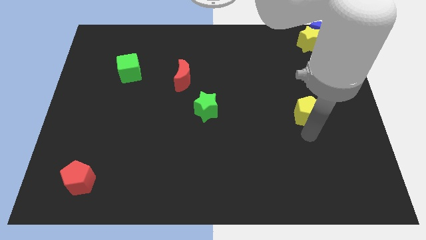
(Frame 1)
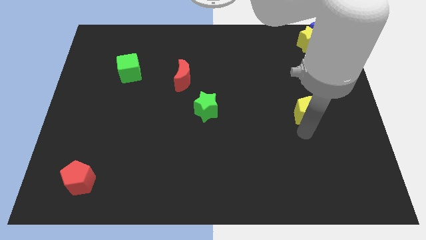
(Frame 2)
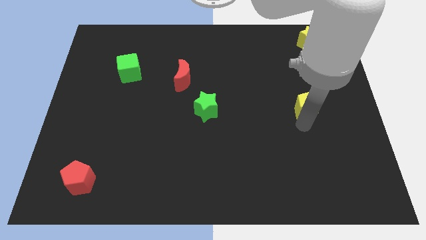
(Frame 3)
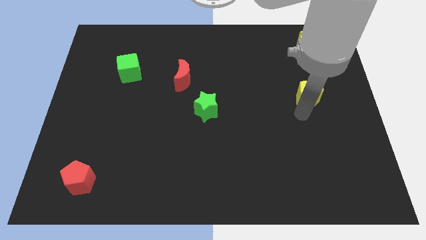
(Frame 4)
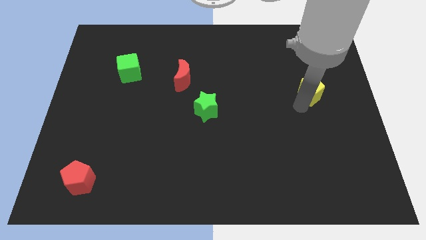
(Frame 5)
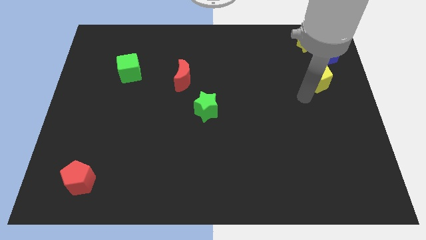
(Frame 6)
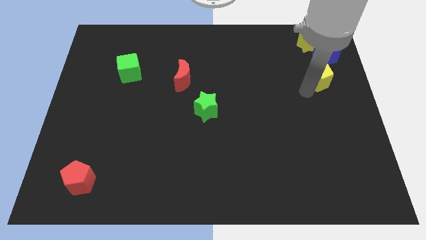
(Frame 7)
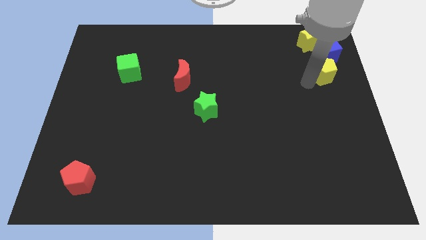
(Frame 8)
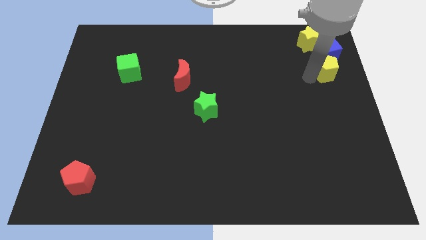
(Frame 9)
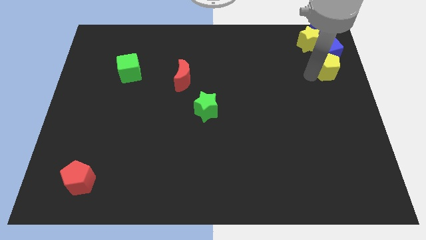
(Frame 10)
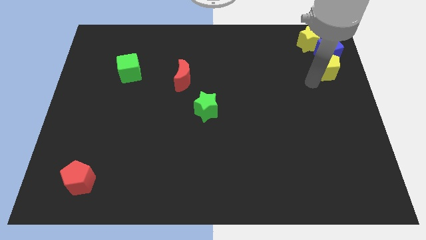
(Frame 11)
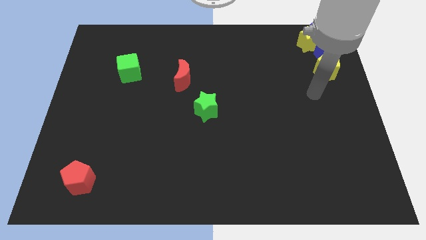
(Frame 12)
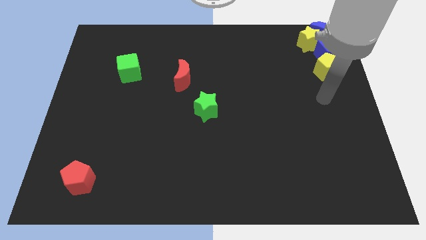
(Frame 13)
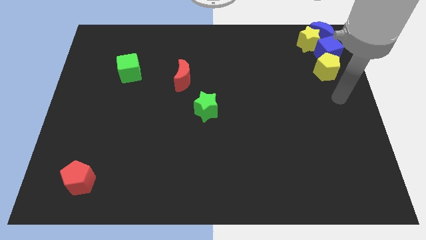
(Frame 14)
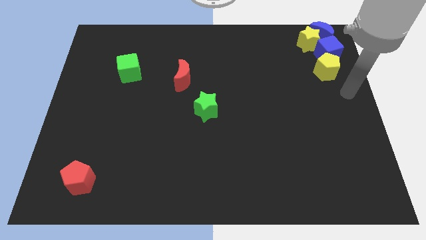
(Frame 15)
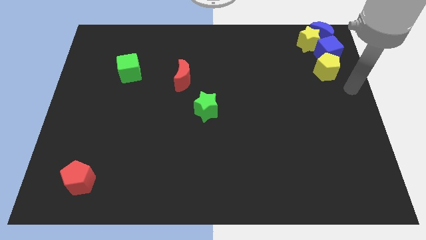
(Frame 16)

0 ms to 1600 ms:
move yellow pentagon into the blue cube

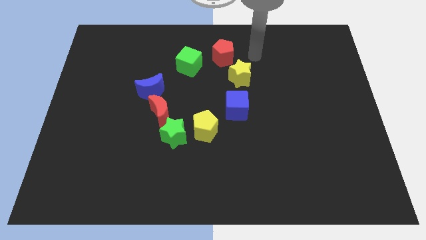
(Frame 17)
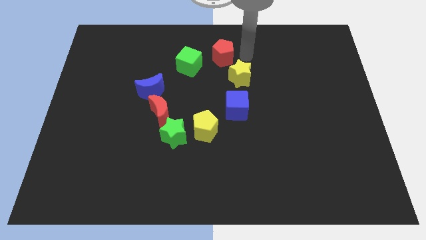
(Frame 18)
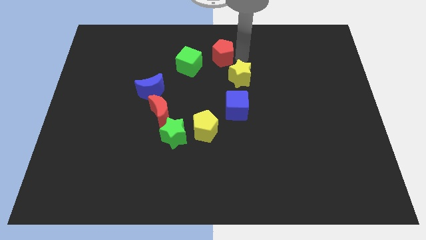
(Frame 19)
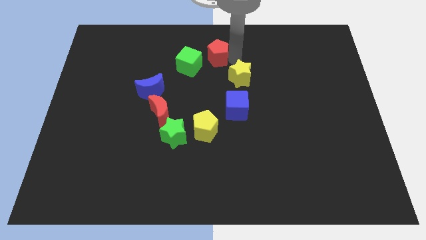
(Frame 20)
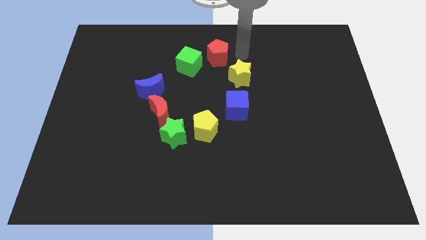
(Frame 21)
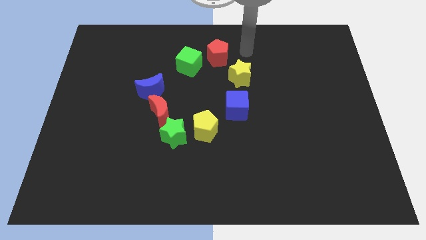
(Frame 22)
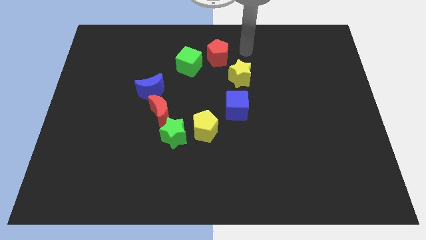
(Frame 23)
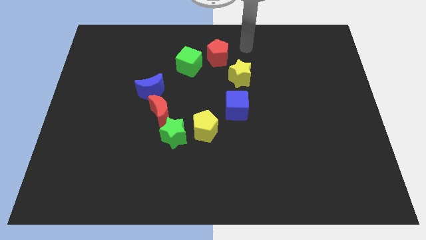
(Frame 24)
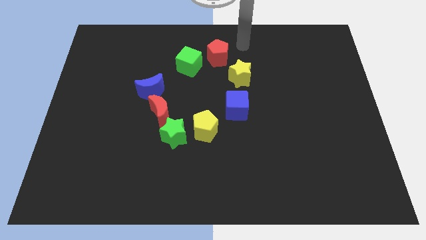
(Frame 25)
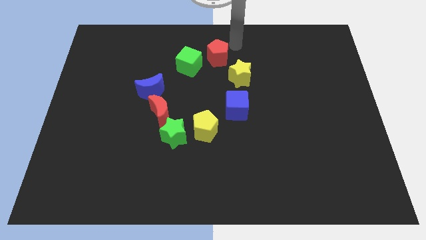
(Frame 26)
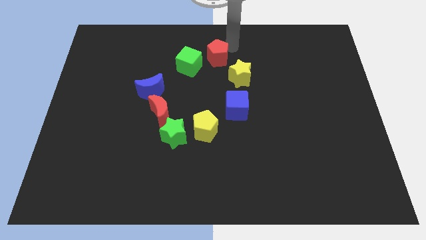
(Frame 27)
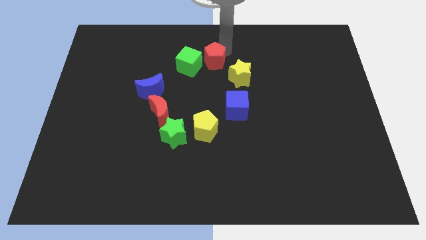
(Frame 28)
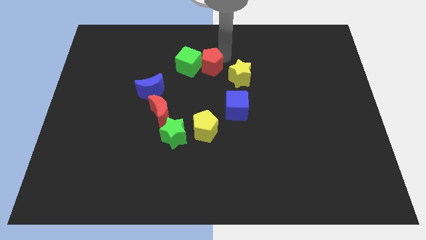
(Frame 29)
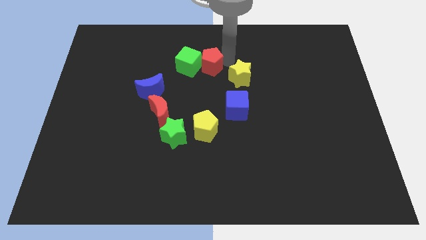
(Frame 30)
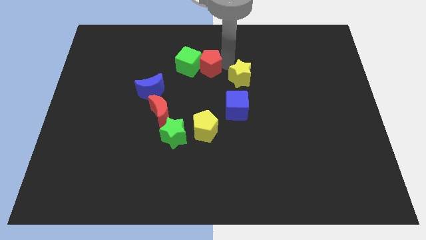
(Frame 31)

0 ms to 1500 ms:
push the red pentagon to the right of the green cube

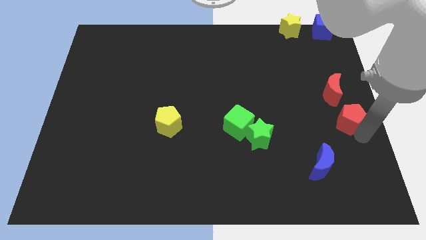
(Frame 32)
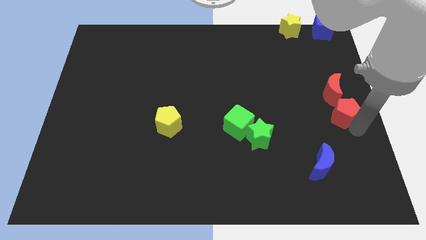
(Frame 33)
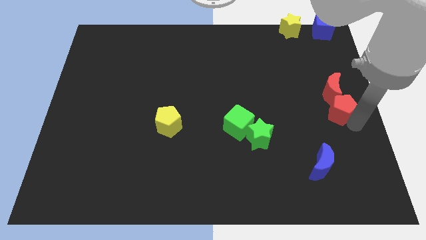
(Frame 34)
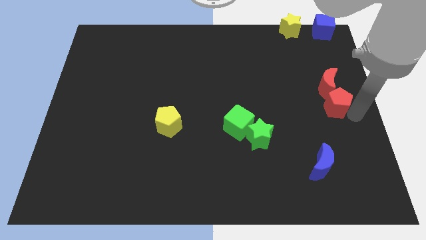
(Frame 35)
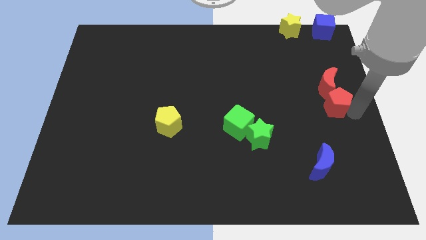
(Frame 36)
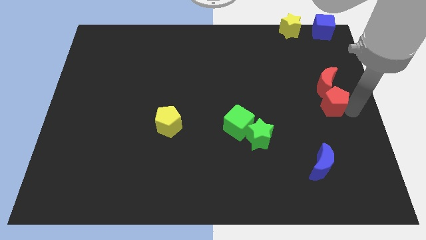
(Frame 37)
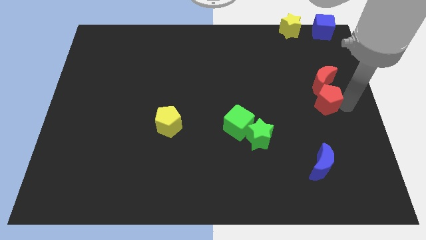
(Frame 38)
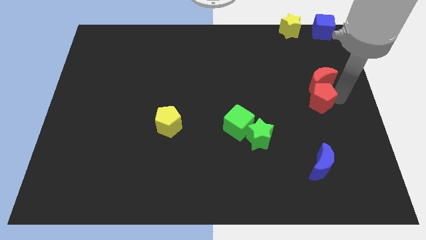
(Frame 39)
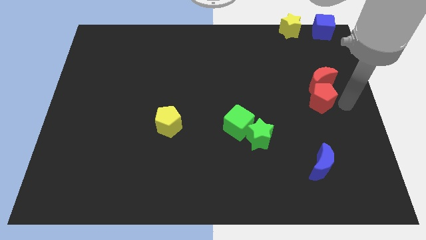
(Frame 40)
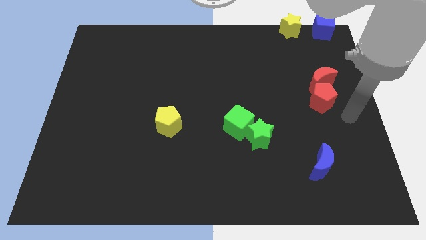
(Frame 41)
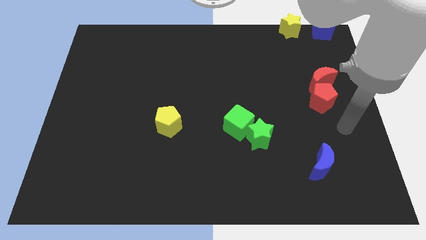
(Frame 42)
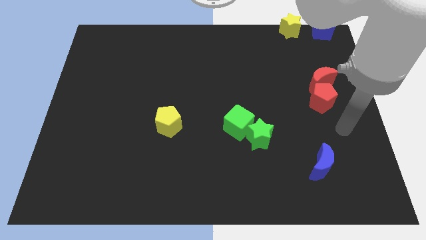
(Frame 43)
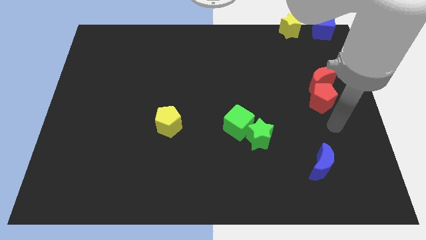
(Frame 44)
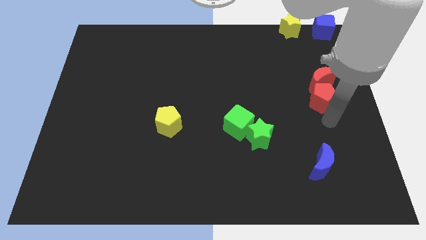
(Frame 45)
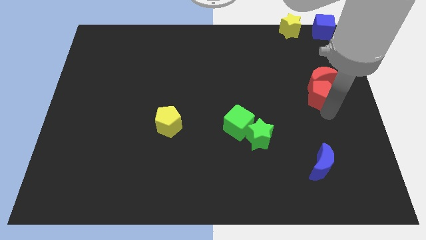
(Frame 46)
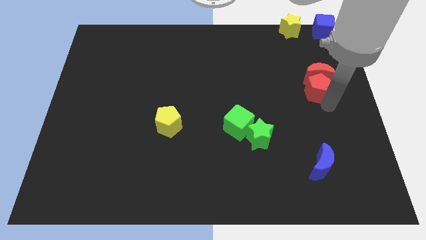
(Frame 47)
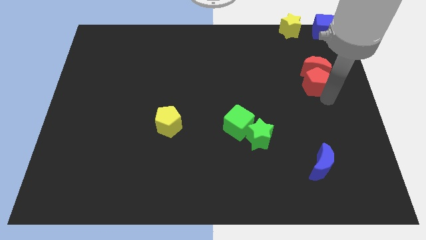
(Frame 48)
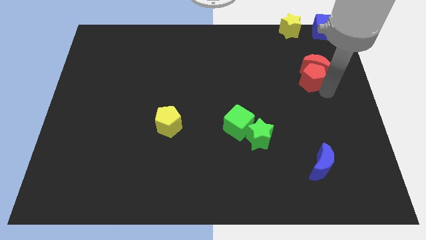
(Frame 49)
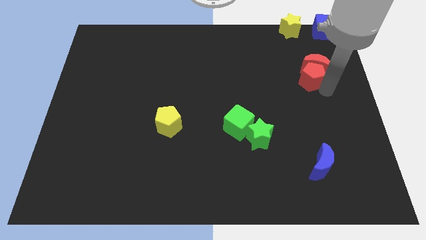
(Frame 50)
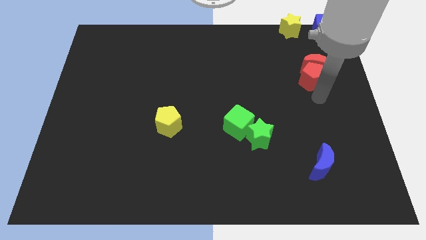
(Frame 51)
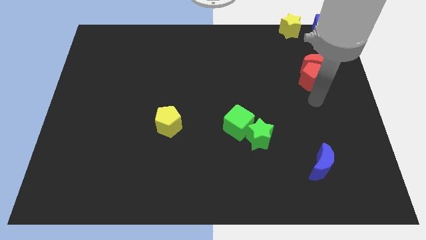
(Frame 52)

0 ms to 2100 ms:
push the red blocks to the bottom of blue cube

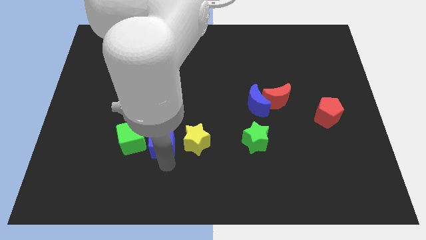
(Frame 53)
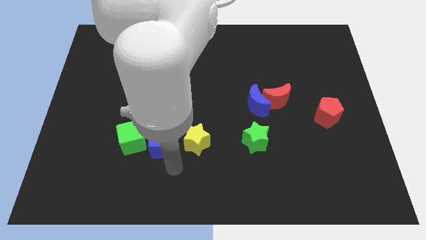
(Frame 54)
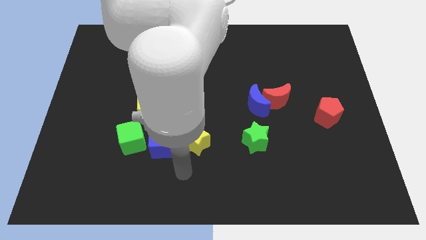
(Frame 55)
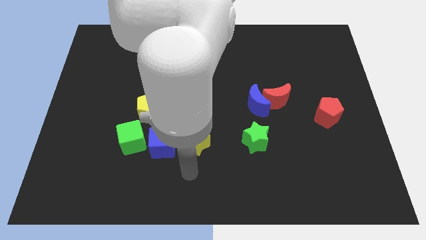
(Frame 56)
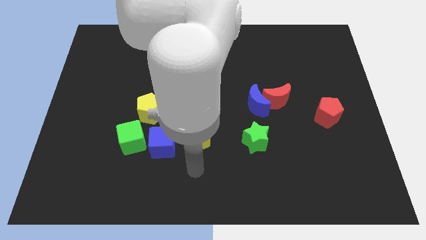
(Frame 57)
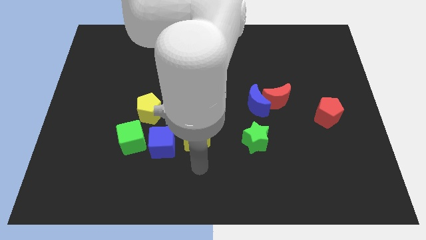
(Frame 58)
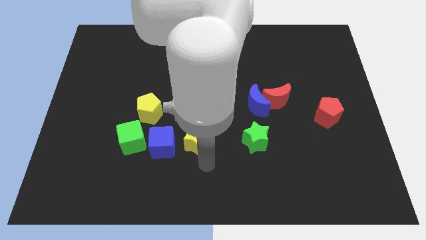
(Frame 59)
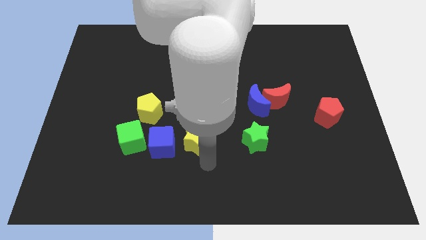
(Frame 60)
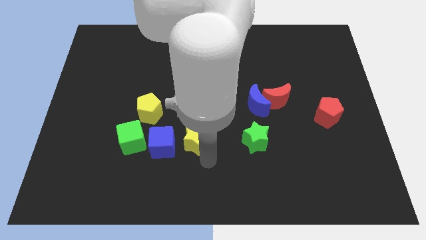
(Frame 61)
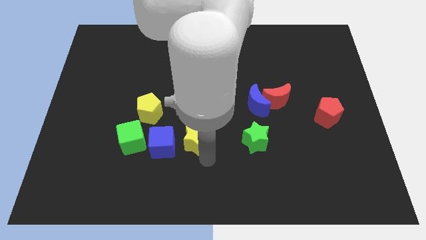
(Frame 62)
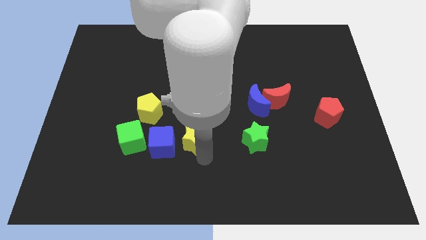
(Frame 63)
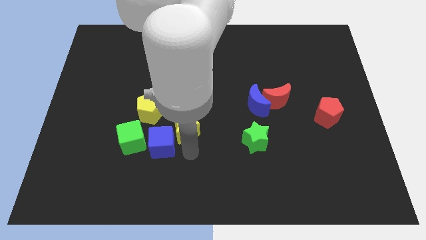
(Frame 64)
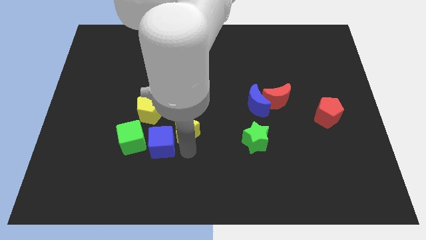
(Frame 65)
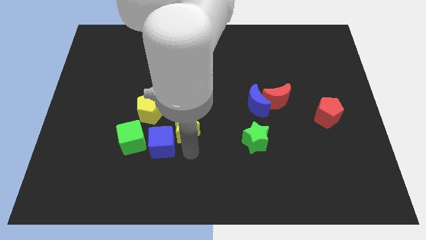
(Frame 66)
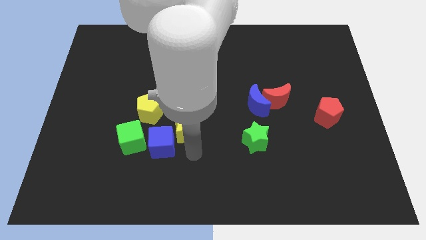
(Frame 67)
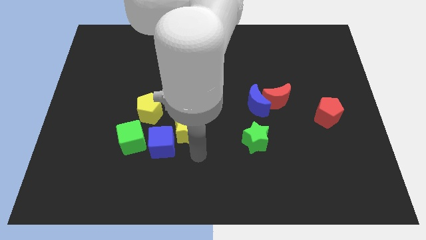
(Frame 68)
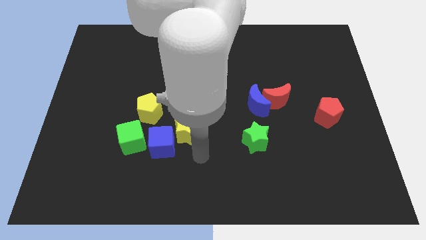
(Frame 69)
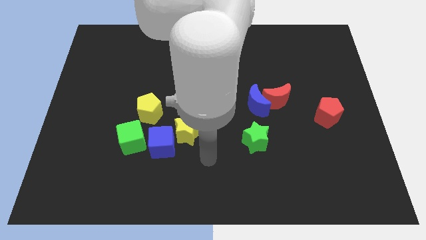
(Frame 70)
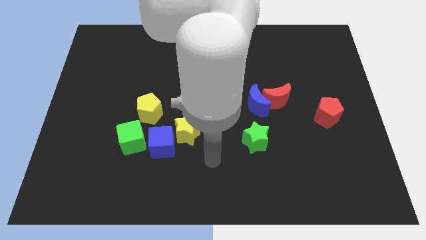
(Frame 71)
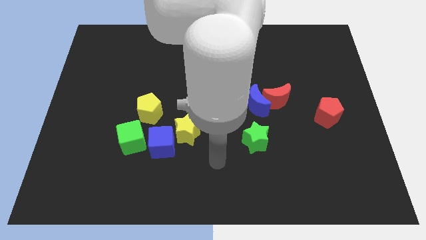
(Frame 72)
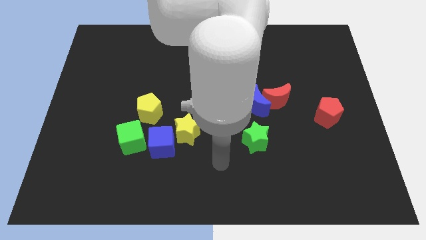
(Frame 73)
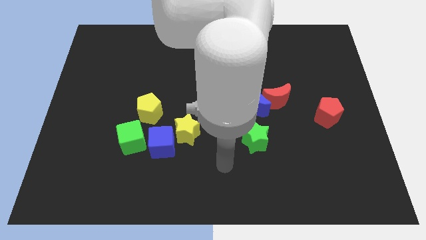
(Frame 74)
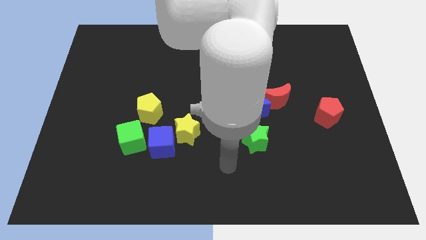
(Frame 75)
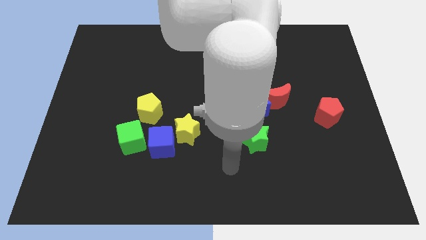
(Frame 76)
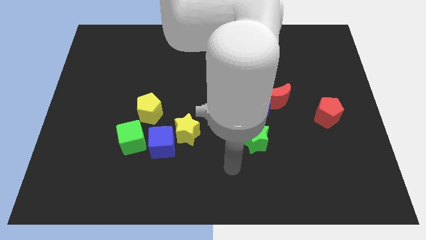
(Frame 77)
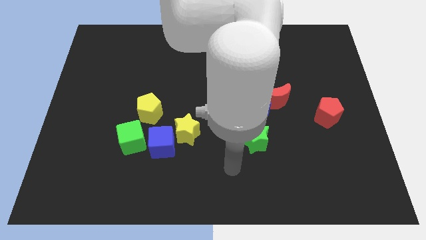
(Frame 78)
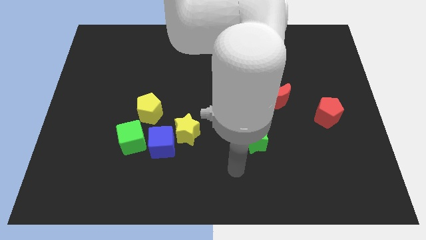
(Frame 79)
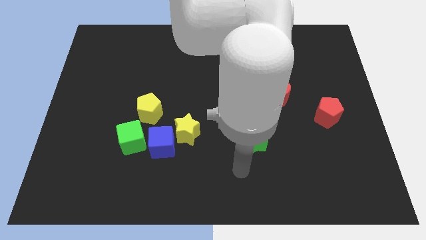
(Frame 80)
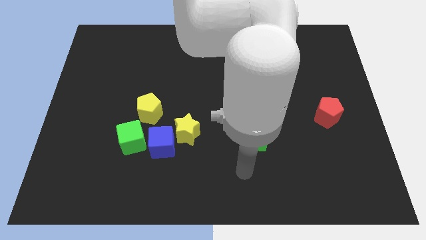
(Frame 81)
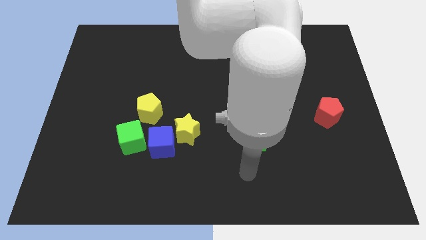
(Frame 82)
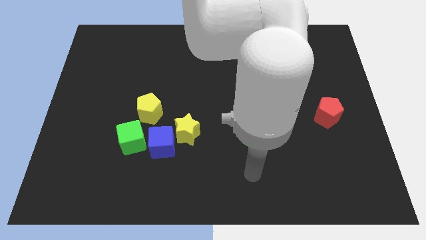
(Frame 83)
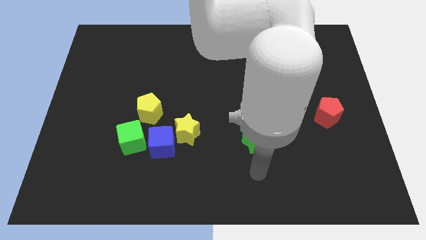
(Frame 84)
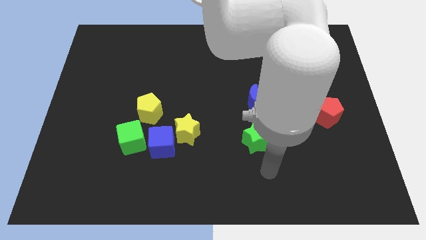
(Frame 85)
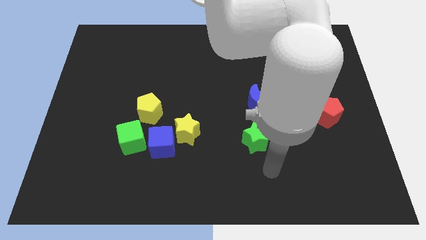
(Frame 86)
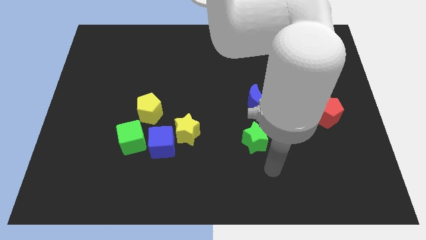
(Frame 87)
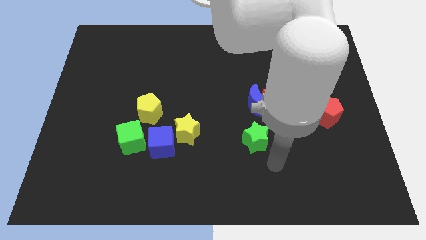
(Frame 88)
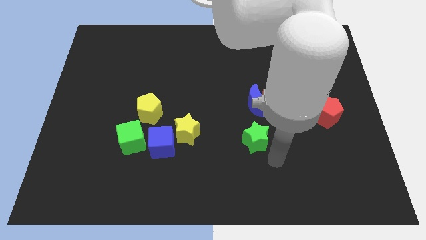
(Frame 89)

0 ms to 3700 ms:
move the yellow star into the blue cube
